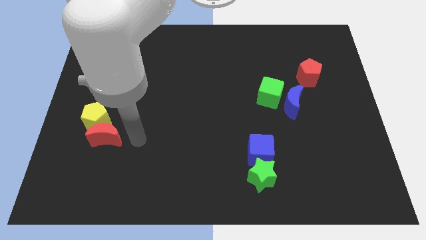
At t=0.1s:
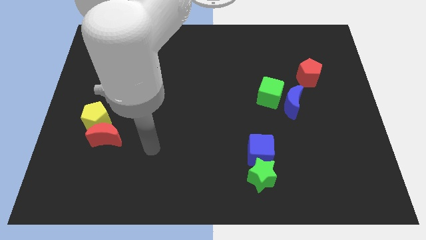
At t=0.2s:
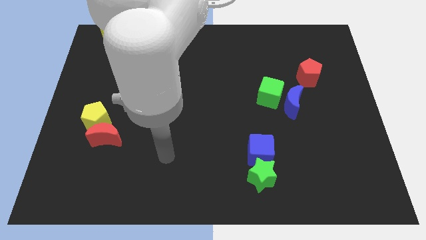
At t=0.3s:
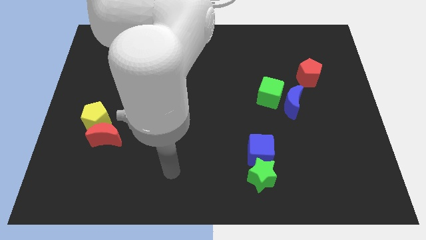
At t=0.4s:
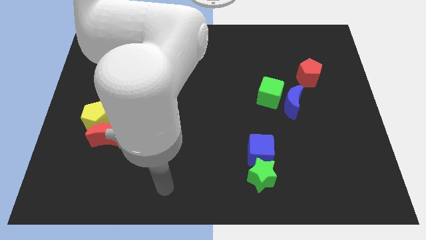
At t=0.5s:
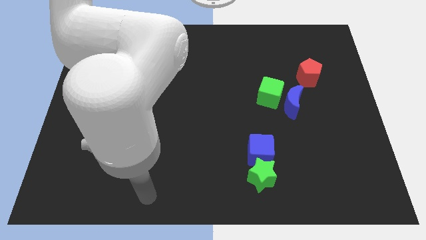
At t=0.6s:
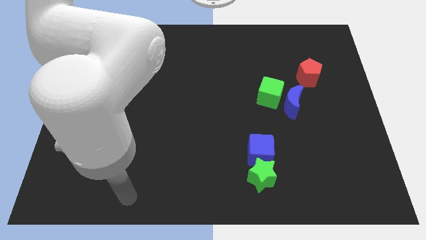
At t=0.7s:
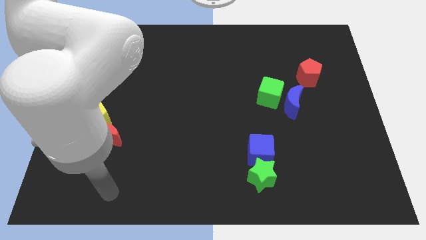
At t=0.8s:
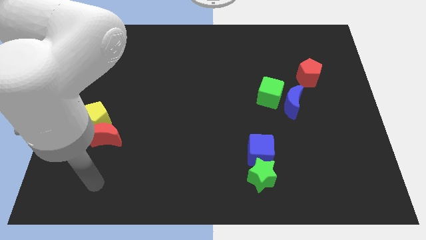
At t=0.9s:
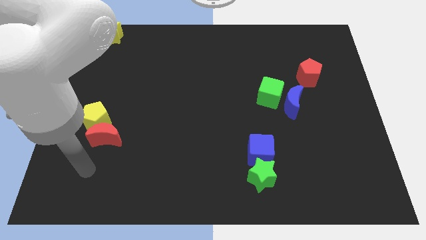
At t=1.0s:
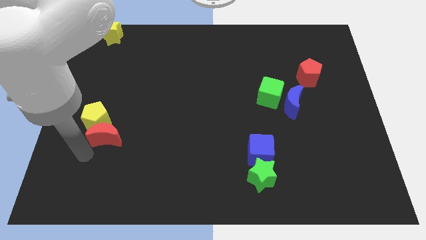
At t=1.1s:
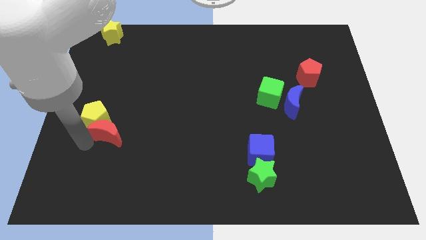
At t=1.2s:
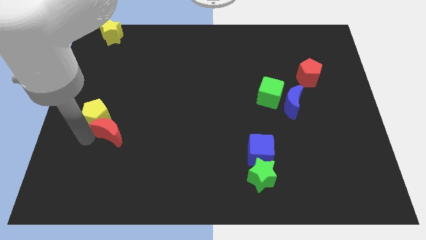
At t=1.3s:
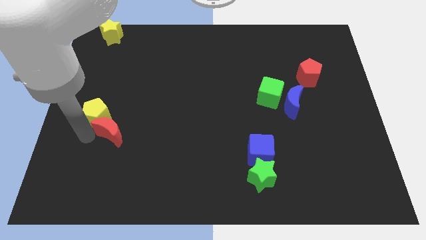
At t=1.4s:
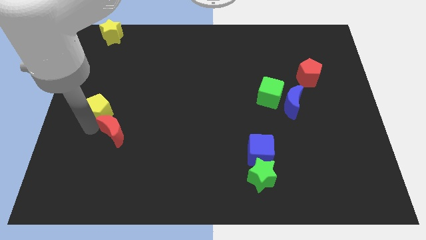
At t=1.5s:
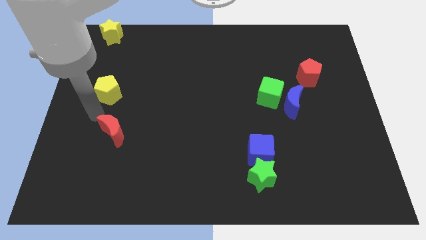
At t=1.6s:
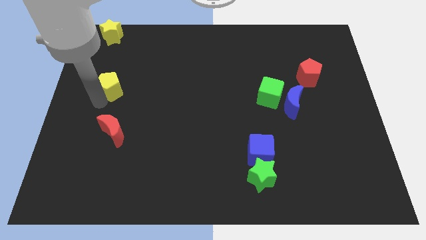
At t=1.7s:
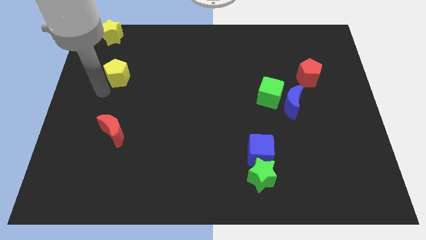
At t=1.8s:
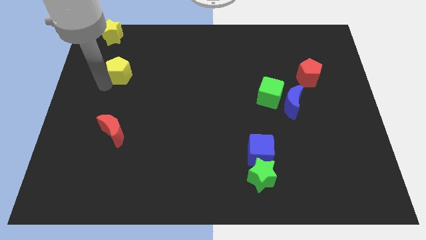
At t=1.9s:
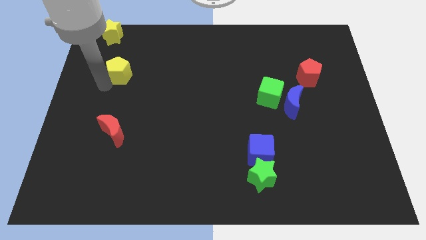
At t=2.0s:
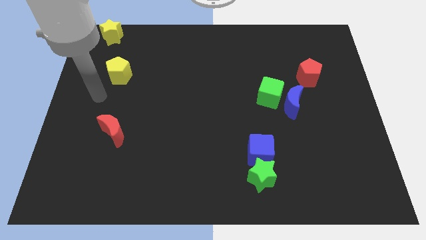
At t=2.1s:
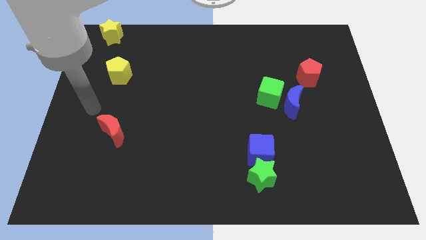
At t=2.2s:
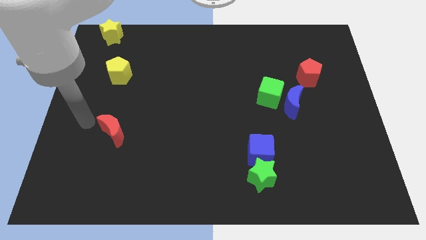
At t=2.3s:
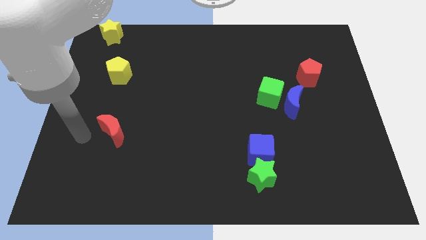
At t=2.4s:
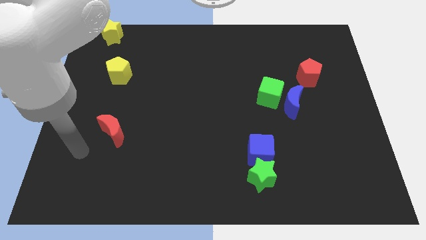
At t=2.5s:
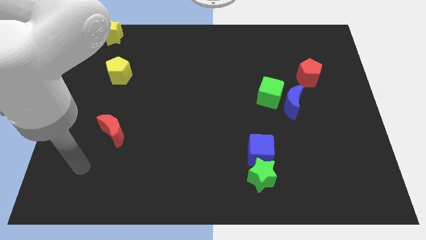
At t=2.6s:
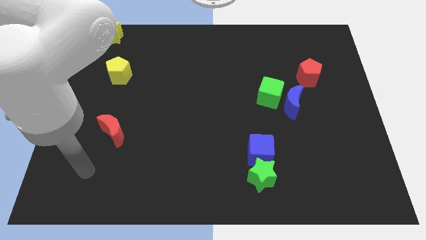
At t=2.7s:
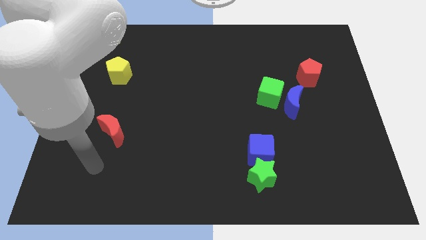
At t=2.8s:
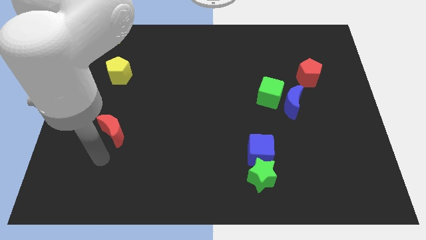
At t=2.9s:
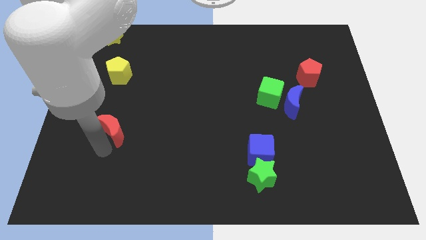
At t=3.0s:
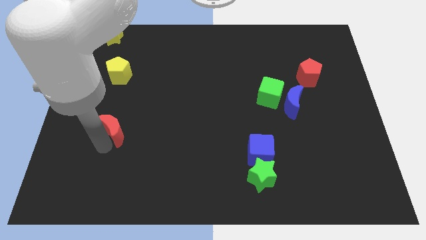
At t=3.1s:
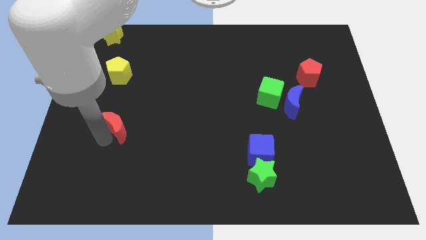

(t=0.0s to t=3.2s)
separate the yellow pentagon from the red crescent

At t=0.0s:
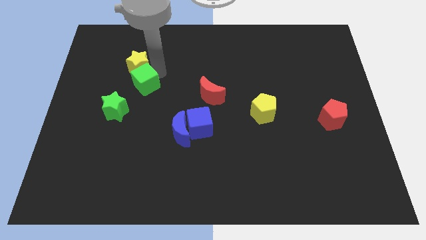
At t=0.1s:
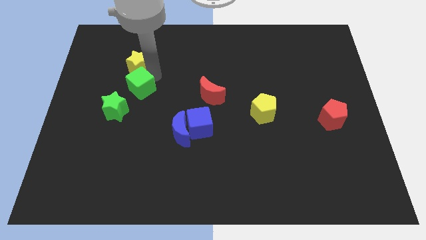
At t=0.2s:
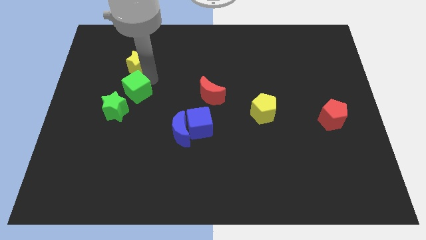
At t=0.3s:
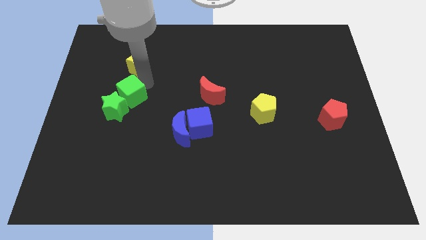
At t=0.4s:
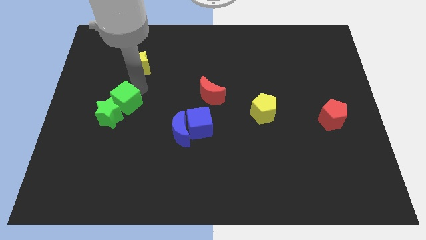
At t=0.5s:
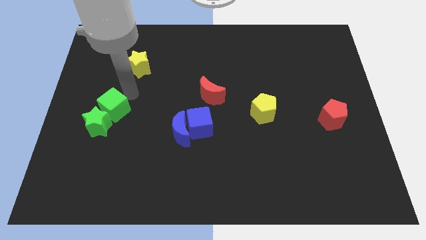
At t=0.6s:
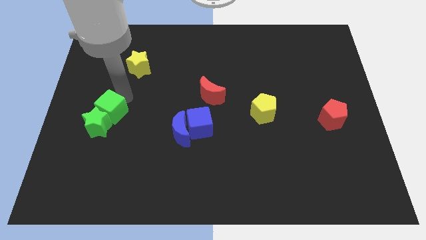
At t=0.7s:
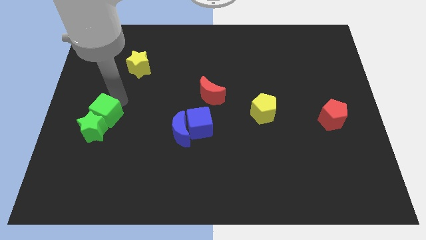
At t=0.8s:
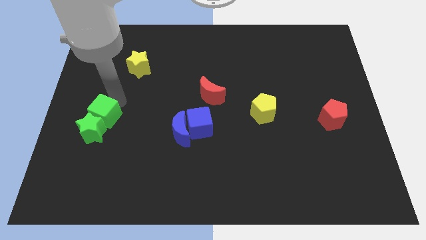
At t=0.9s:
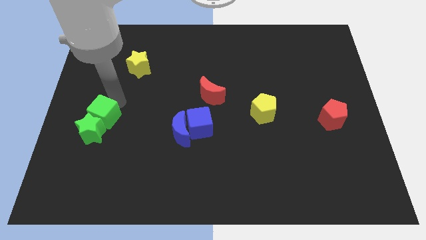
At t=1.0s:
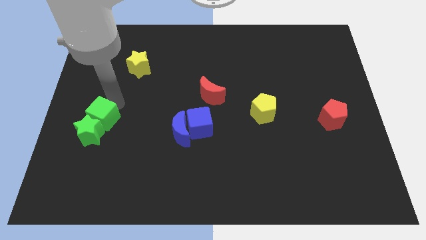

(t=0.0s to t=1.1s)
push the green cube into the green star

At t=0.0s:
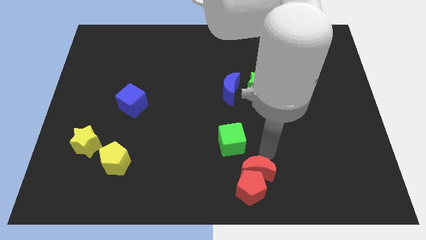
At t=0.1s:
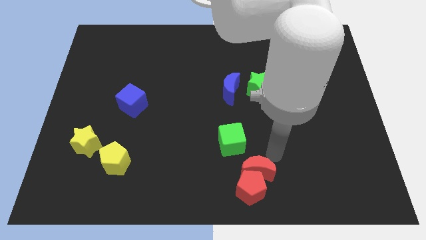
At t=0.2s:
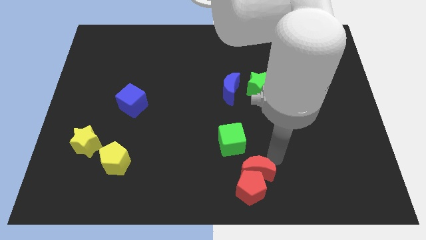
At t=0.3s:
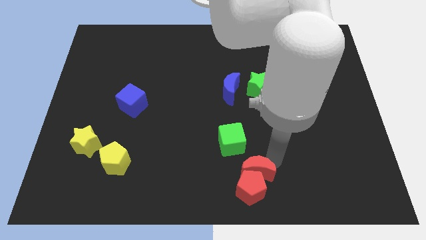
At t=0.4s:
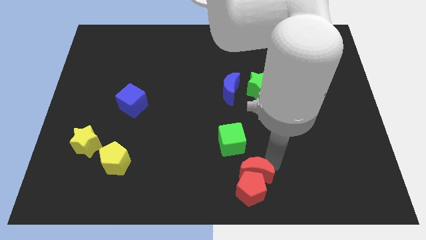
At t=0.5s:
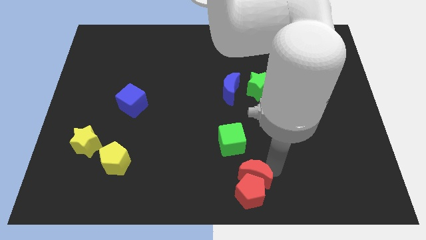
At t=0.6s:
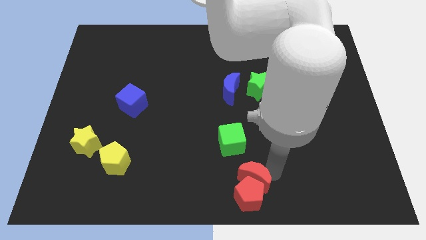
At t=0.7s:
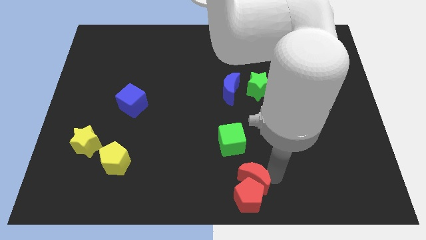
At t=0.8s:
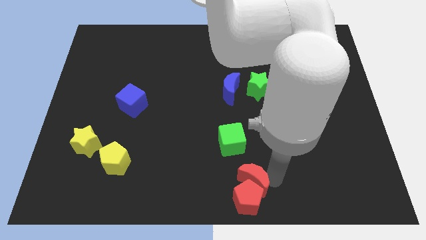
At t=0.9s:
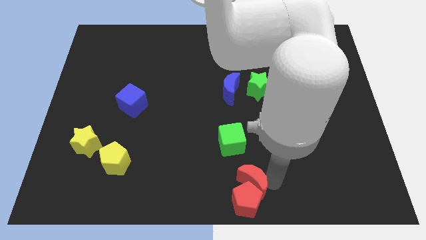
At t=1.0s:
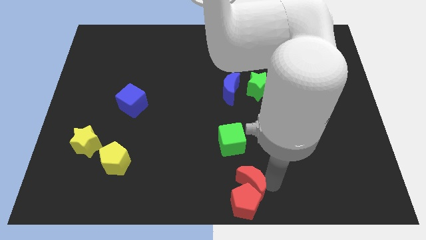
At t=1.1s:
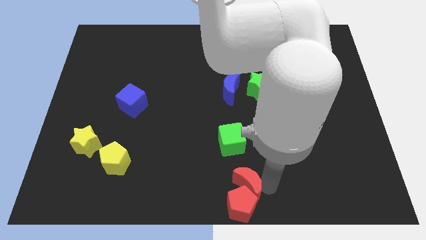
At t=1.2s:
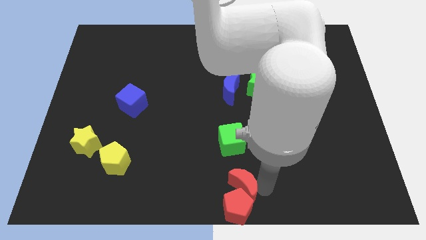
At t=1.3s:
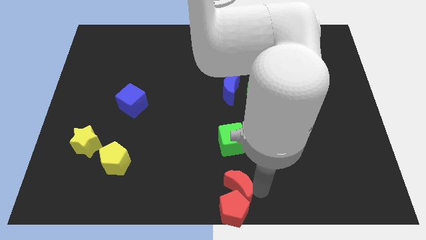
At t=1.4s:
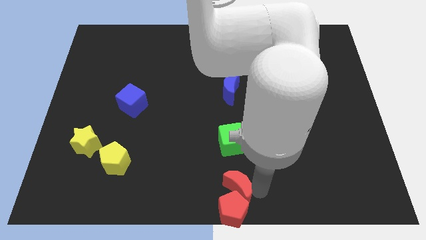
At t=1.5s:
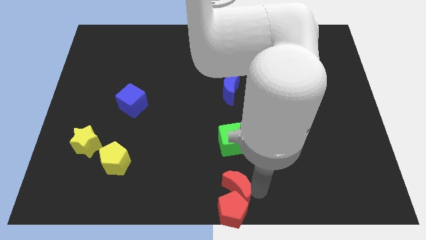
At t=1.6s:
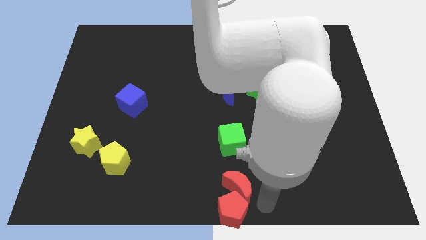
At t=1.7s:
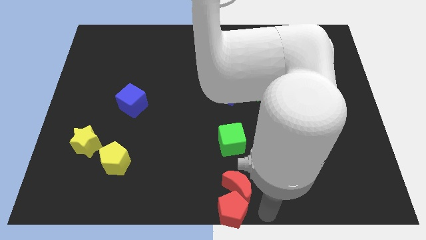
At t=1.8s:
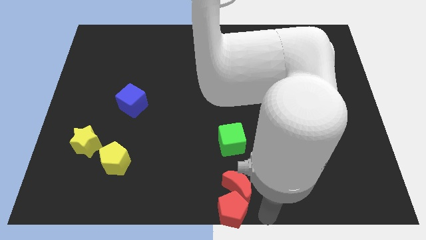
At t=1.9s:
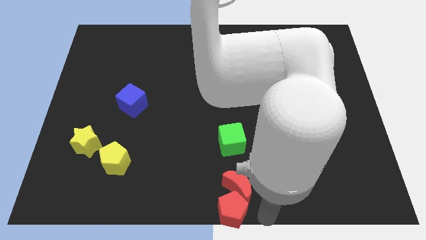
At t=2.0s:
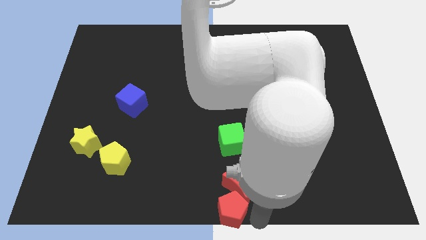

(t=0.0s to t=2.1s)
move red moon along with red pentagon towards bottom right

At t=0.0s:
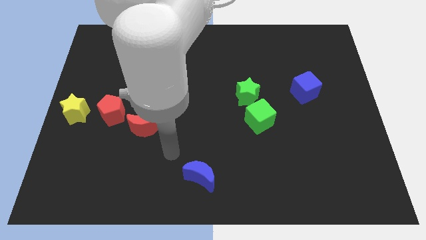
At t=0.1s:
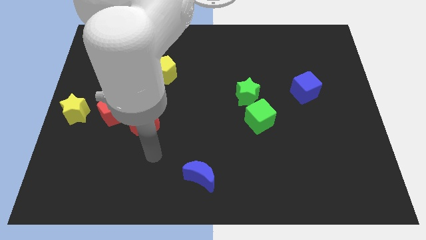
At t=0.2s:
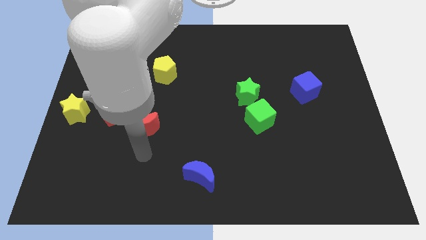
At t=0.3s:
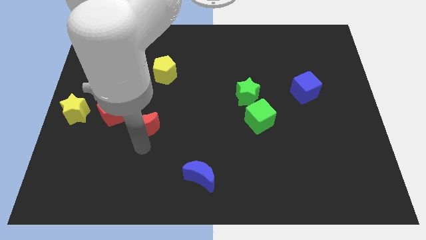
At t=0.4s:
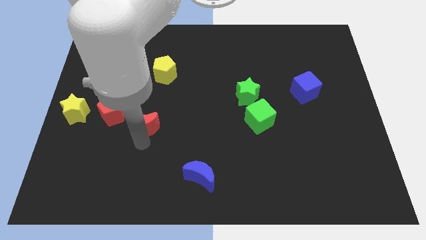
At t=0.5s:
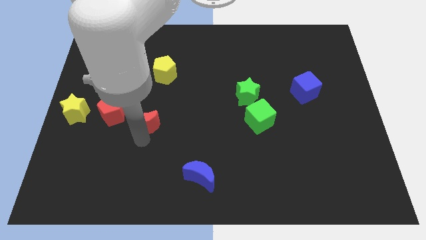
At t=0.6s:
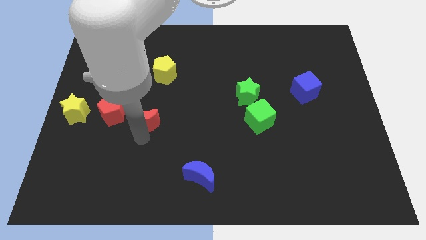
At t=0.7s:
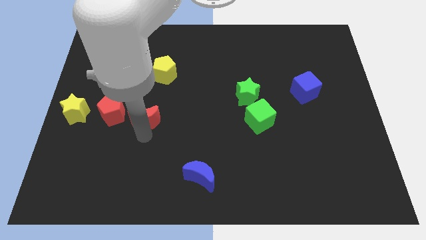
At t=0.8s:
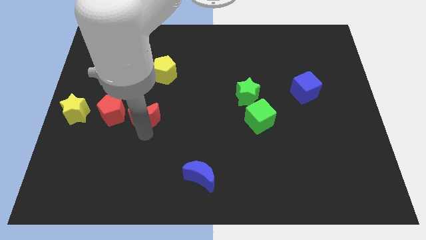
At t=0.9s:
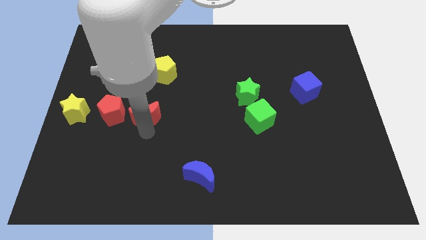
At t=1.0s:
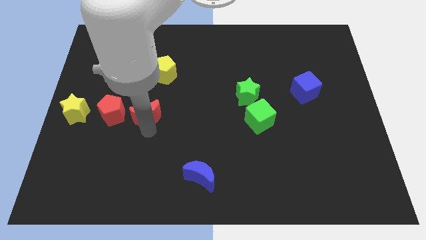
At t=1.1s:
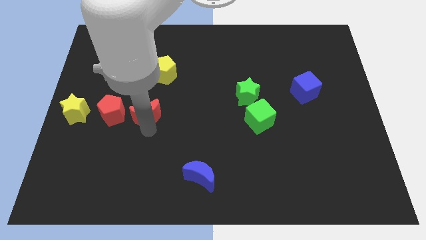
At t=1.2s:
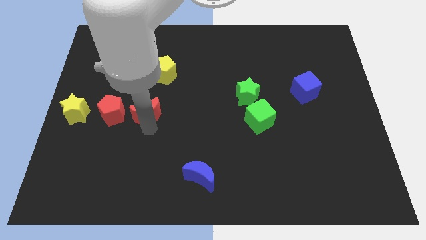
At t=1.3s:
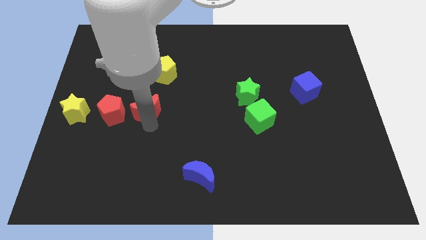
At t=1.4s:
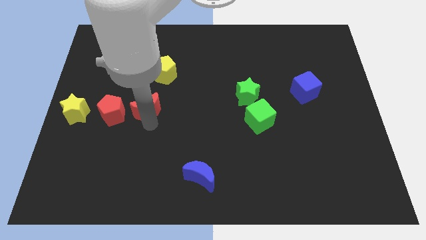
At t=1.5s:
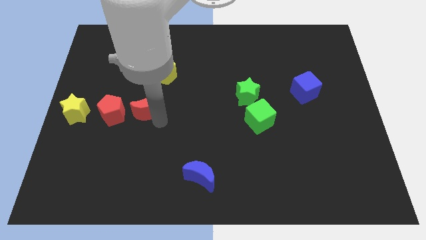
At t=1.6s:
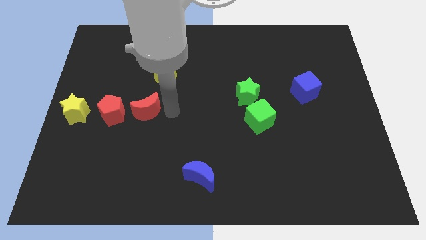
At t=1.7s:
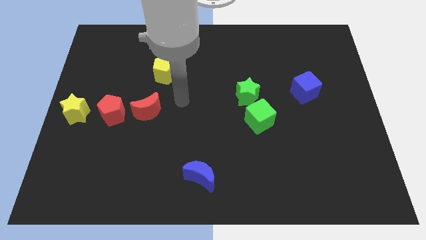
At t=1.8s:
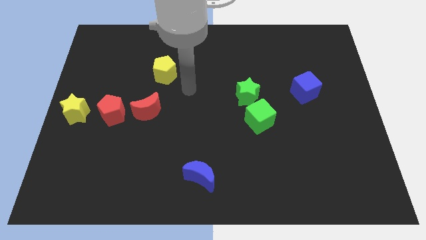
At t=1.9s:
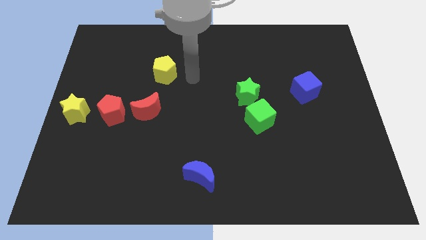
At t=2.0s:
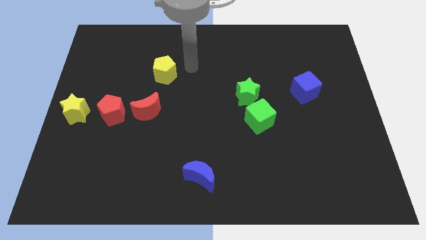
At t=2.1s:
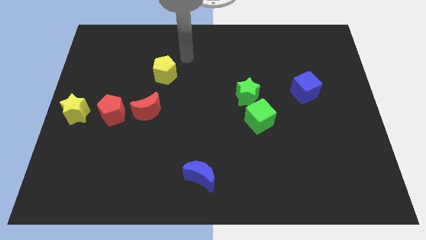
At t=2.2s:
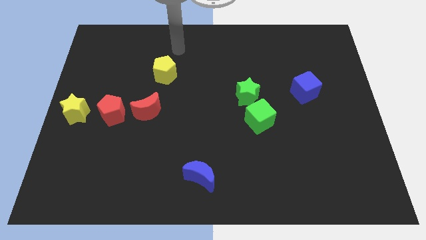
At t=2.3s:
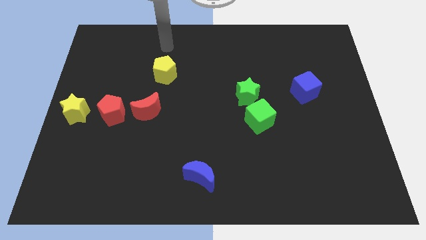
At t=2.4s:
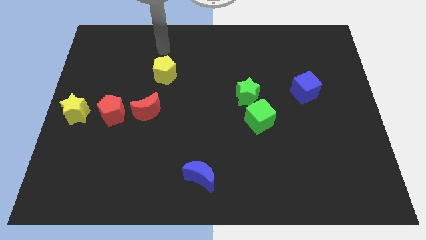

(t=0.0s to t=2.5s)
push the red crescent to the right of the red pentagon
